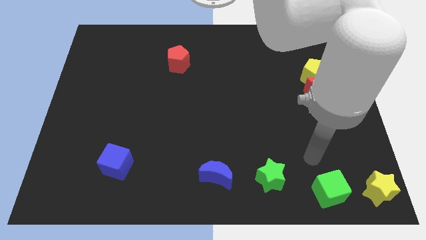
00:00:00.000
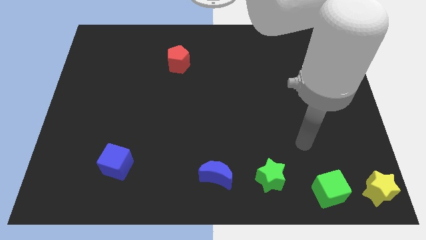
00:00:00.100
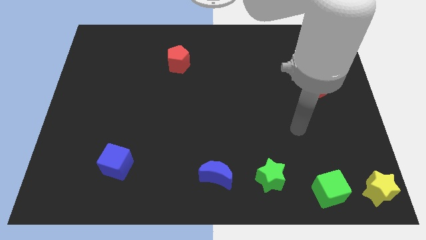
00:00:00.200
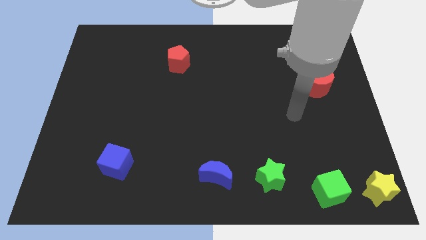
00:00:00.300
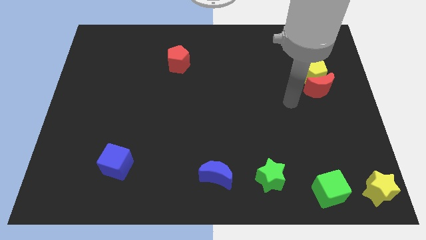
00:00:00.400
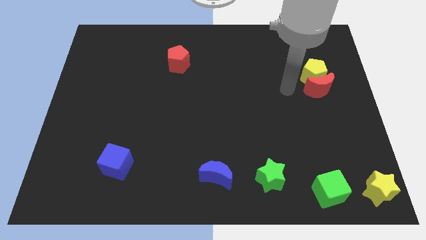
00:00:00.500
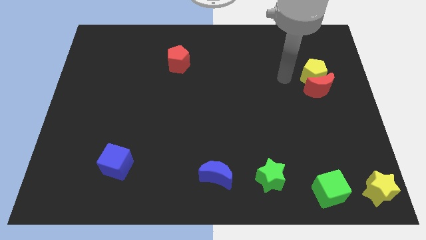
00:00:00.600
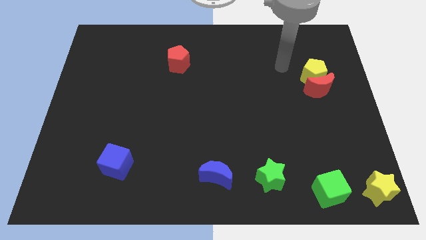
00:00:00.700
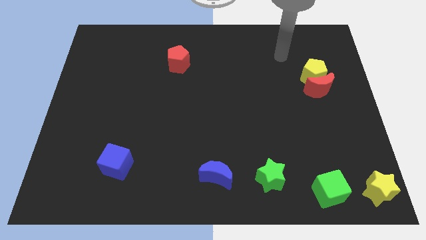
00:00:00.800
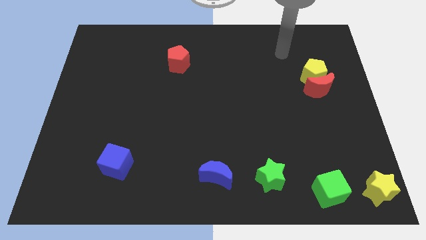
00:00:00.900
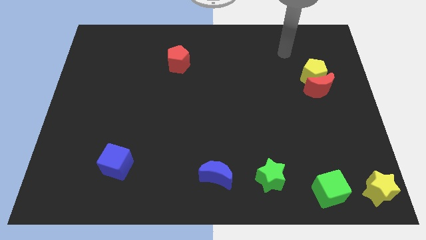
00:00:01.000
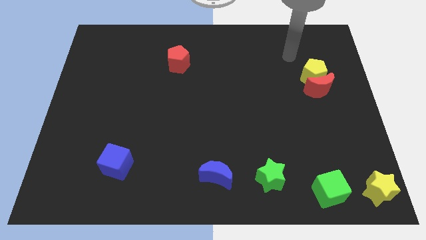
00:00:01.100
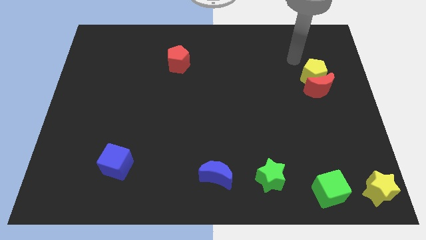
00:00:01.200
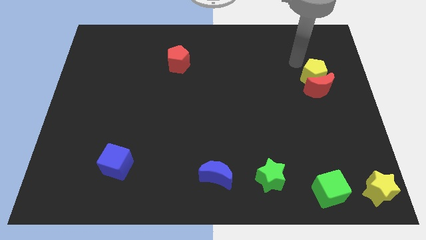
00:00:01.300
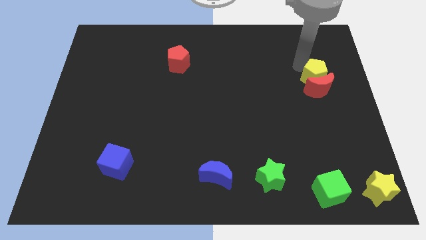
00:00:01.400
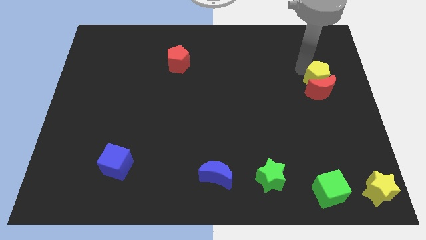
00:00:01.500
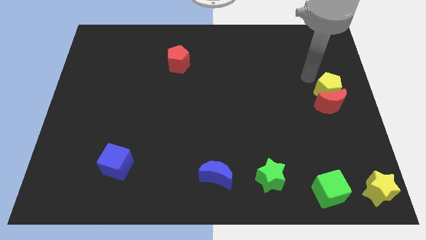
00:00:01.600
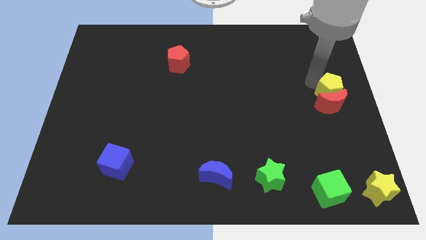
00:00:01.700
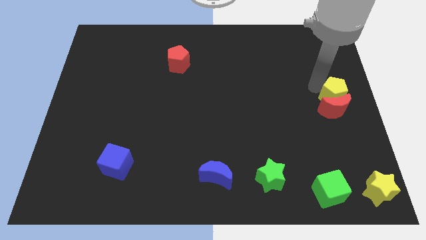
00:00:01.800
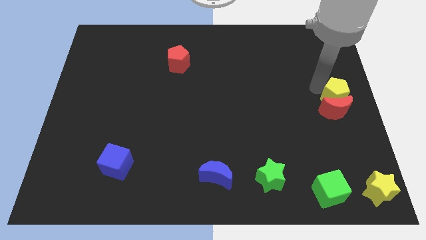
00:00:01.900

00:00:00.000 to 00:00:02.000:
move the yellow pentagon along with the red crescent slightly to the bottom

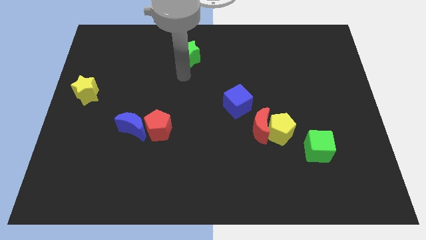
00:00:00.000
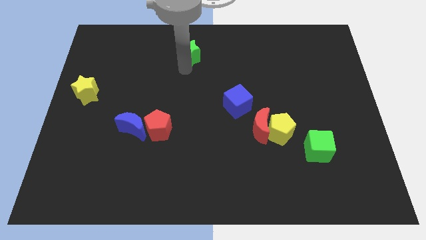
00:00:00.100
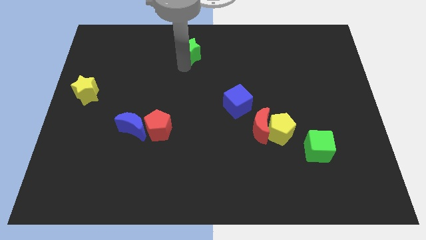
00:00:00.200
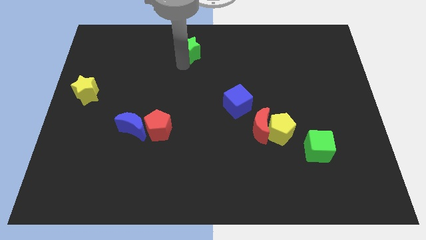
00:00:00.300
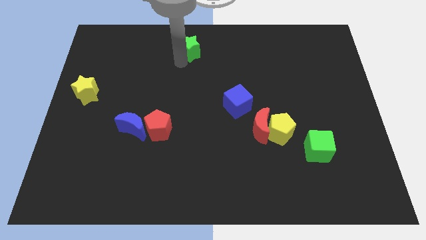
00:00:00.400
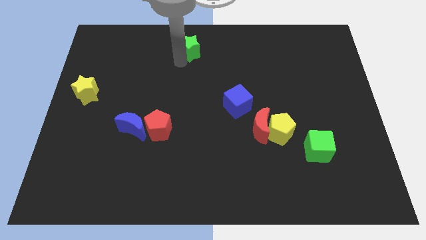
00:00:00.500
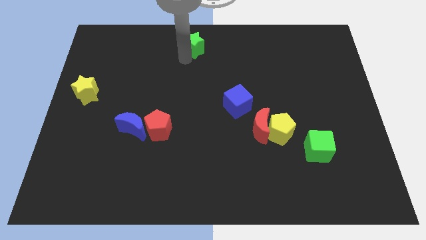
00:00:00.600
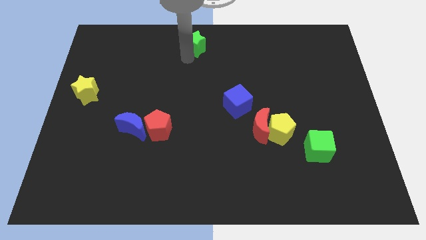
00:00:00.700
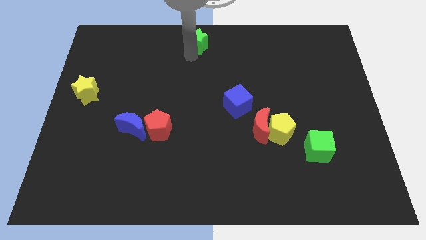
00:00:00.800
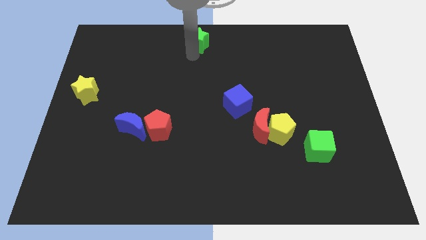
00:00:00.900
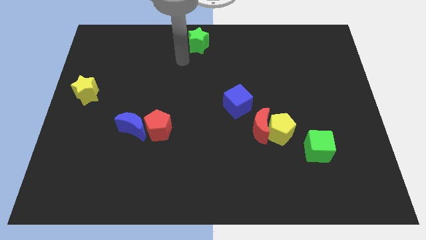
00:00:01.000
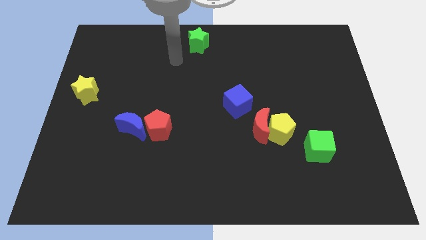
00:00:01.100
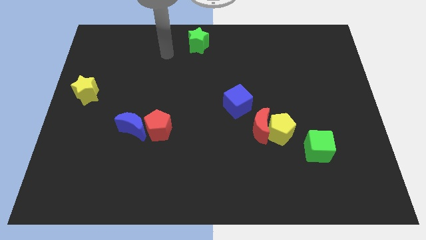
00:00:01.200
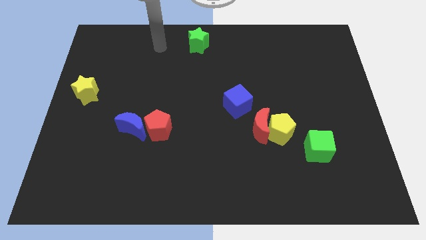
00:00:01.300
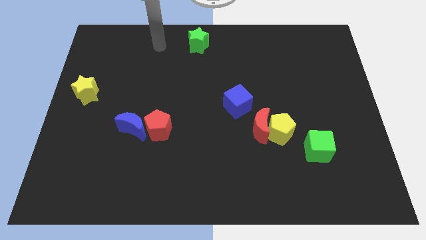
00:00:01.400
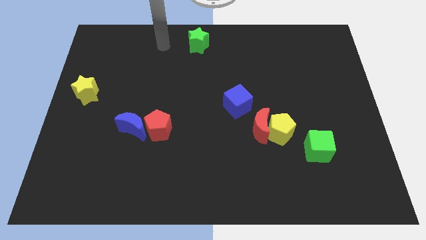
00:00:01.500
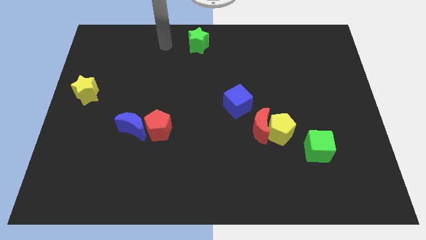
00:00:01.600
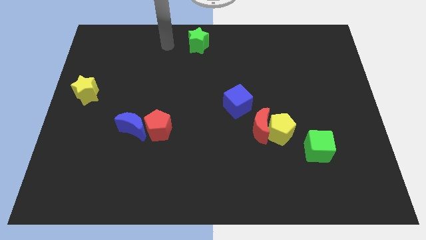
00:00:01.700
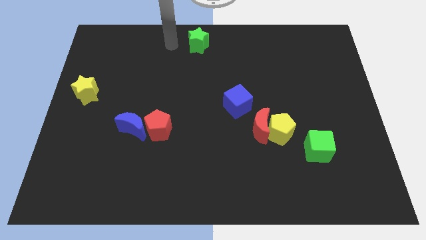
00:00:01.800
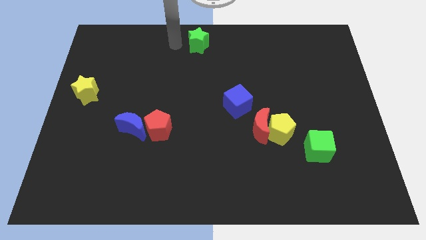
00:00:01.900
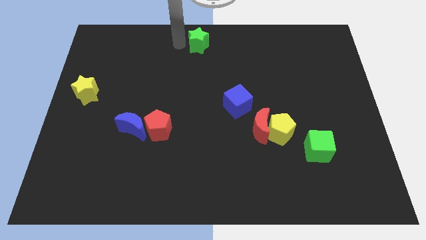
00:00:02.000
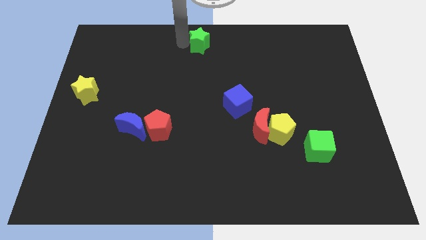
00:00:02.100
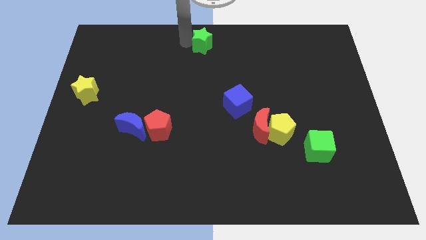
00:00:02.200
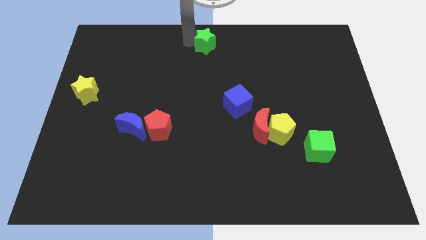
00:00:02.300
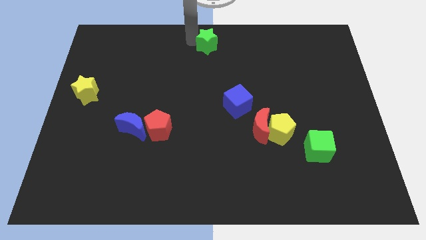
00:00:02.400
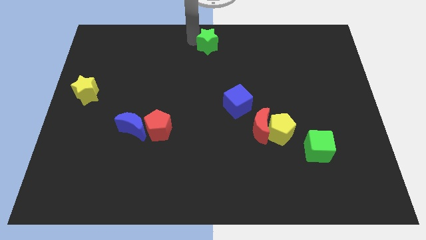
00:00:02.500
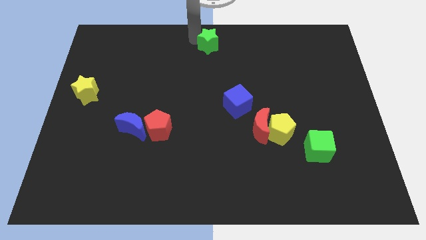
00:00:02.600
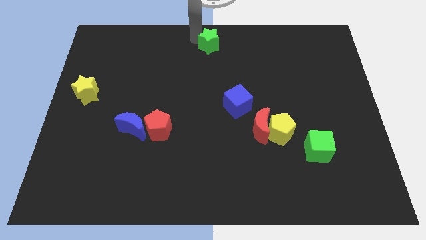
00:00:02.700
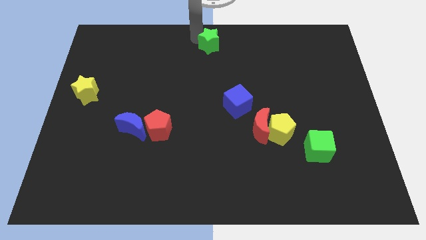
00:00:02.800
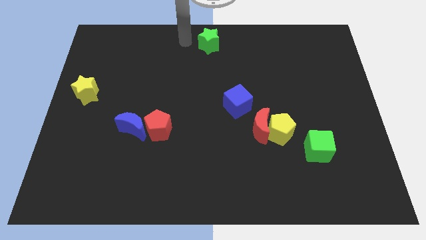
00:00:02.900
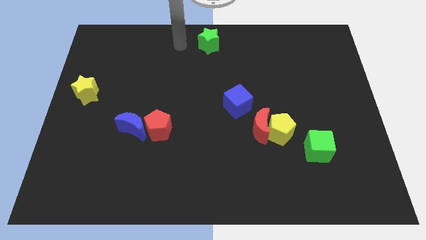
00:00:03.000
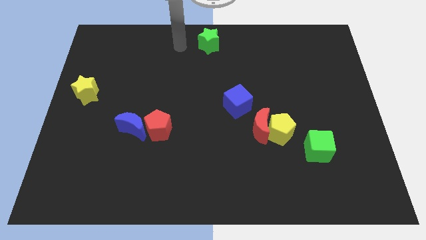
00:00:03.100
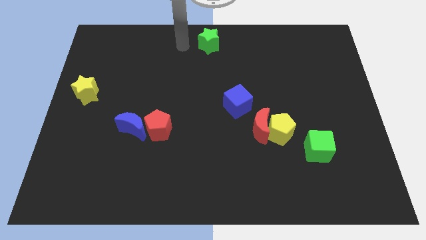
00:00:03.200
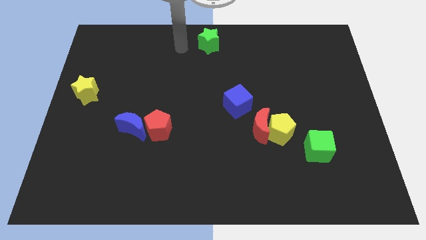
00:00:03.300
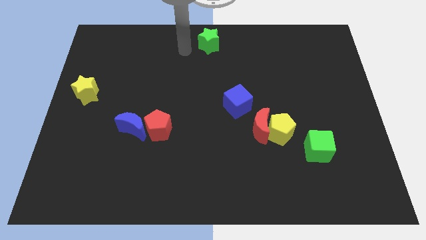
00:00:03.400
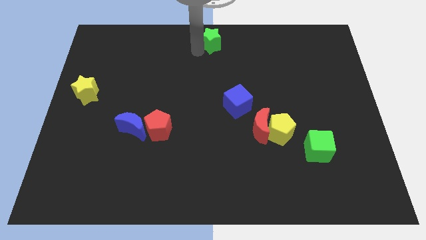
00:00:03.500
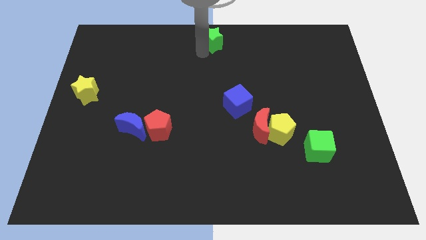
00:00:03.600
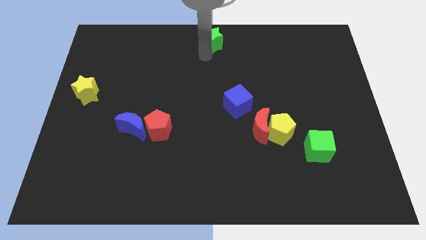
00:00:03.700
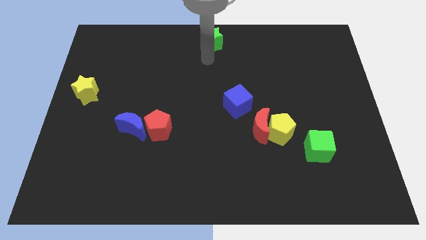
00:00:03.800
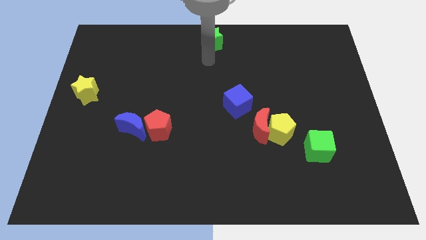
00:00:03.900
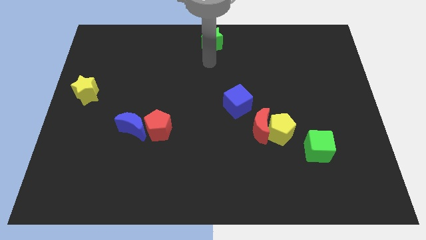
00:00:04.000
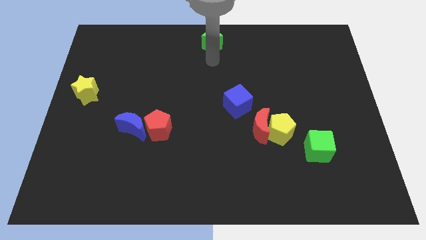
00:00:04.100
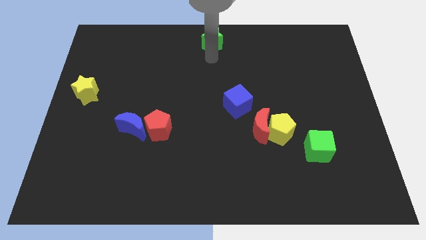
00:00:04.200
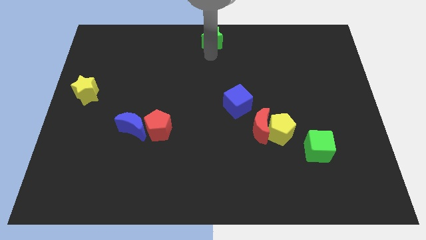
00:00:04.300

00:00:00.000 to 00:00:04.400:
place the green star to the top middle of the board

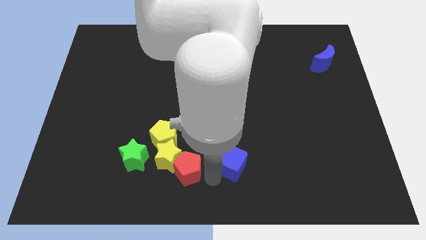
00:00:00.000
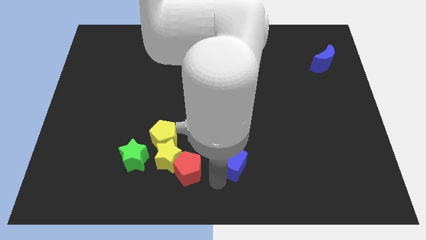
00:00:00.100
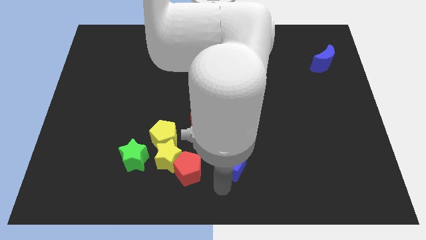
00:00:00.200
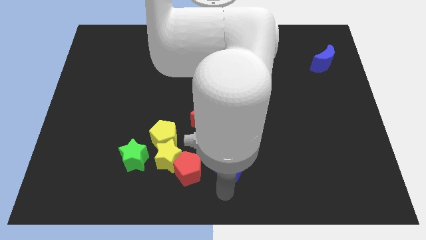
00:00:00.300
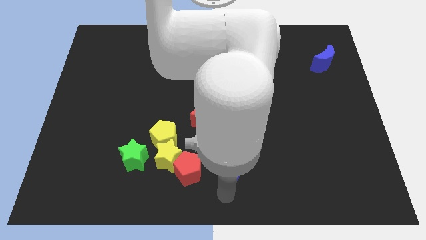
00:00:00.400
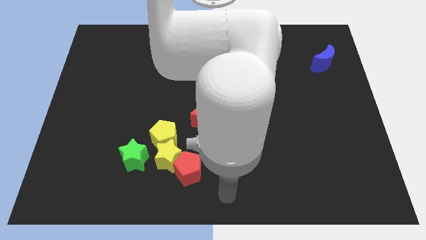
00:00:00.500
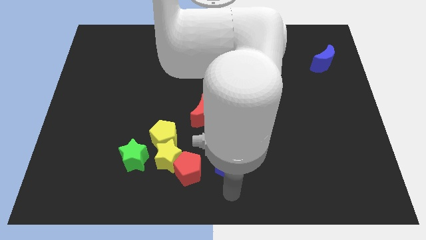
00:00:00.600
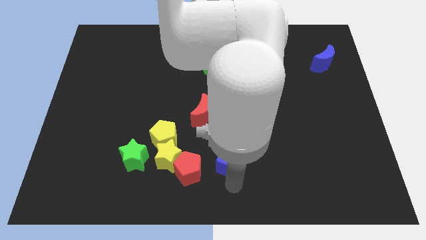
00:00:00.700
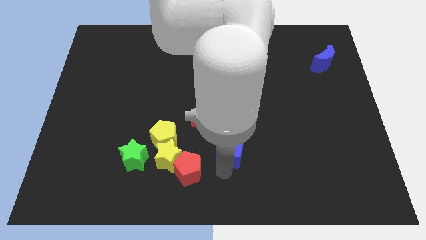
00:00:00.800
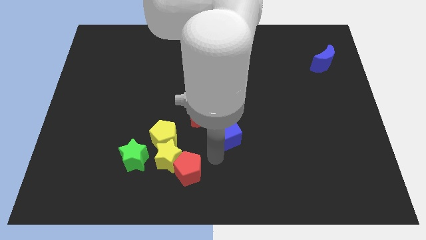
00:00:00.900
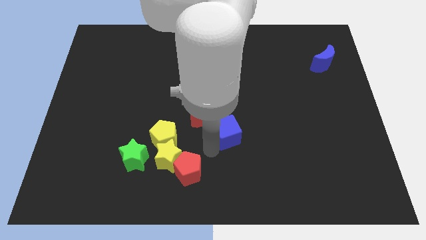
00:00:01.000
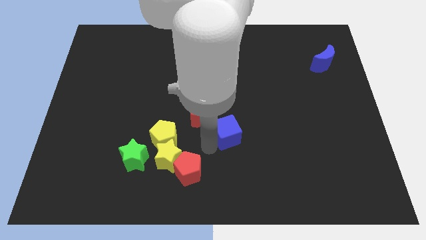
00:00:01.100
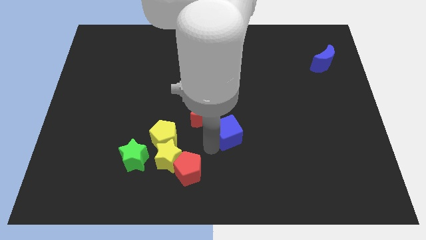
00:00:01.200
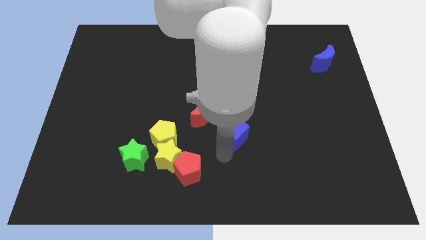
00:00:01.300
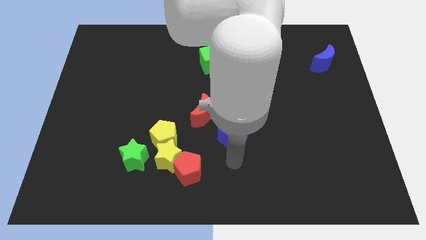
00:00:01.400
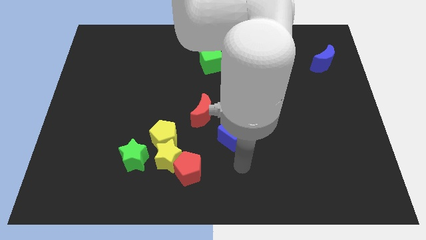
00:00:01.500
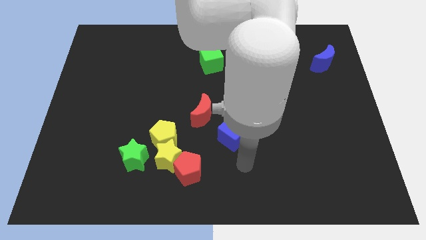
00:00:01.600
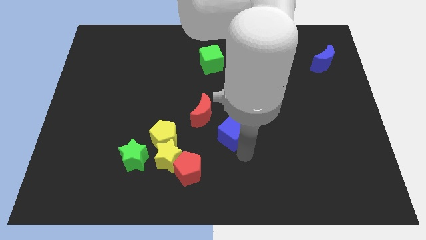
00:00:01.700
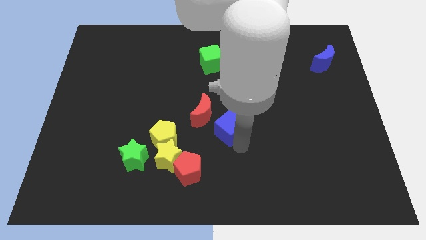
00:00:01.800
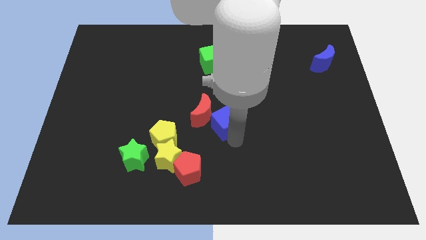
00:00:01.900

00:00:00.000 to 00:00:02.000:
move the blue cube towards the red crescent

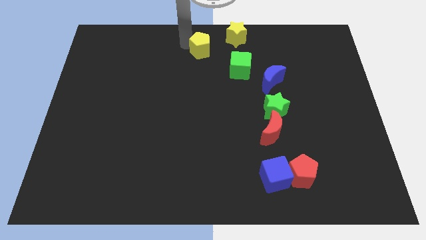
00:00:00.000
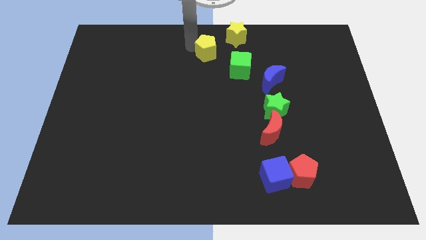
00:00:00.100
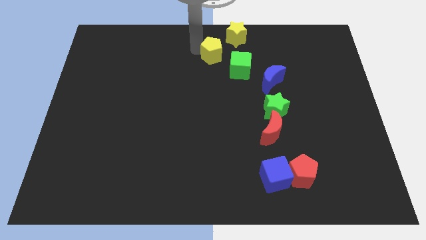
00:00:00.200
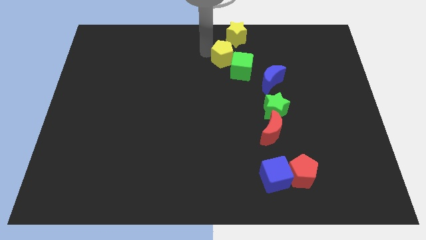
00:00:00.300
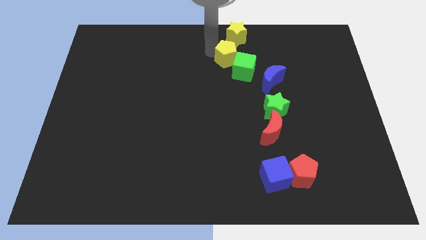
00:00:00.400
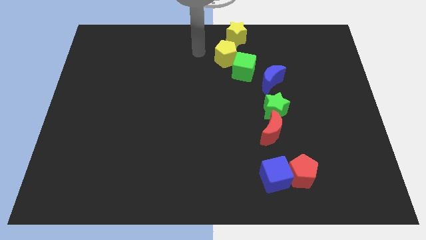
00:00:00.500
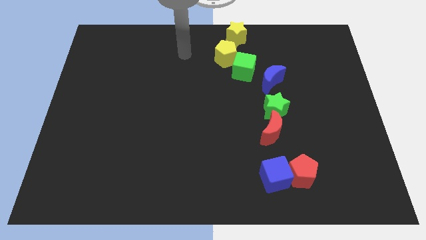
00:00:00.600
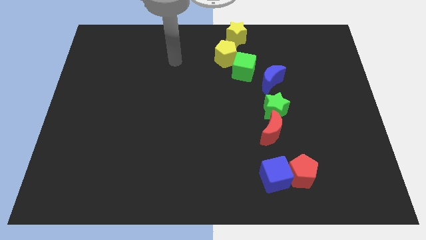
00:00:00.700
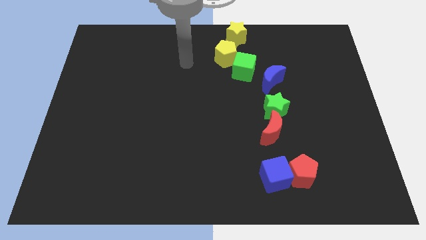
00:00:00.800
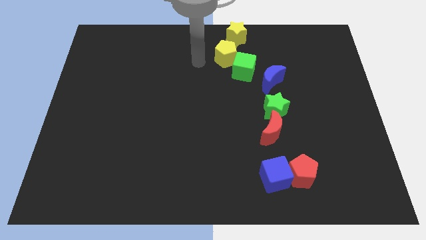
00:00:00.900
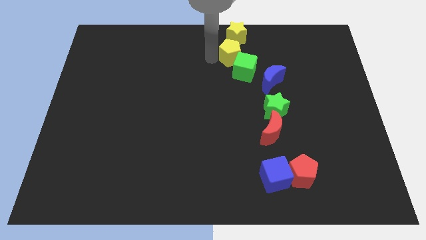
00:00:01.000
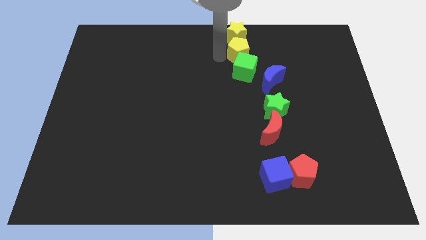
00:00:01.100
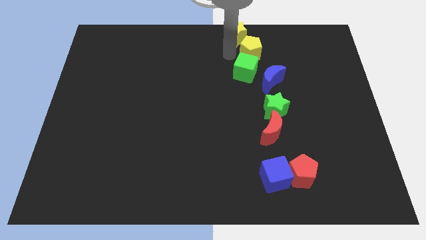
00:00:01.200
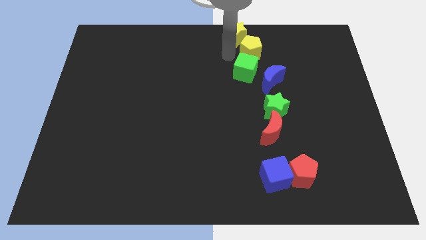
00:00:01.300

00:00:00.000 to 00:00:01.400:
place the yellow pentagon in between yellow star and green cube
